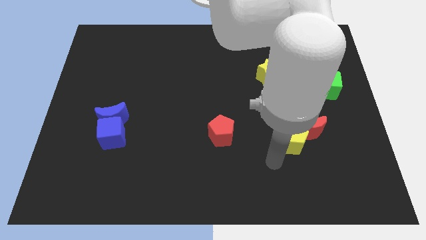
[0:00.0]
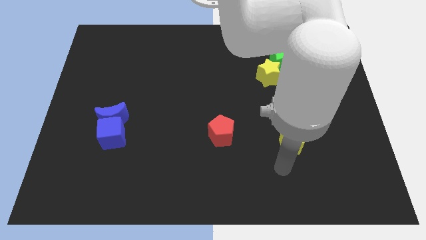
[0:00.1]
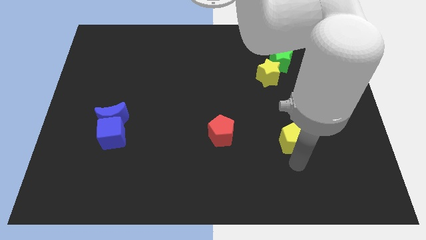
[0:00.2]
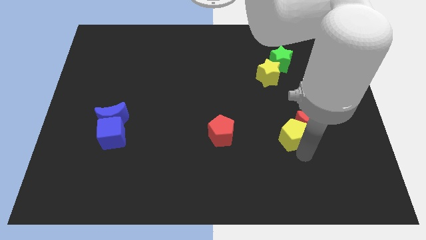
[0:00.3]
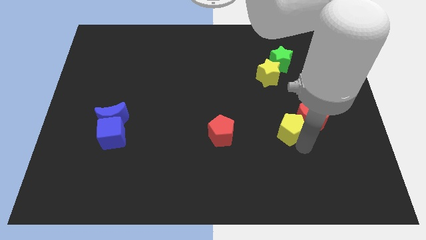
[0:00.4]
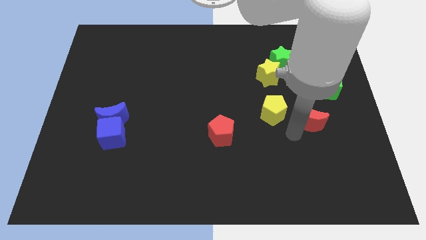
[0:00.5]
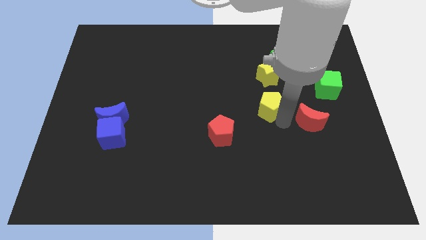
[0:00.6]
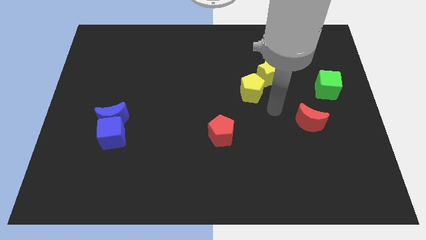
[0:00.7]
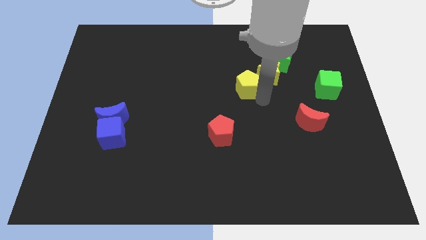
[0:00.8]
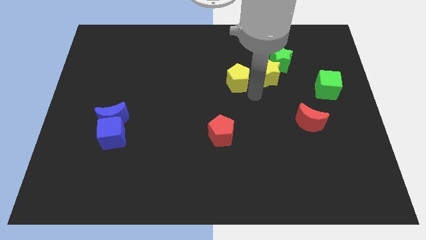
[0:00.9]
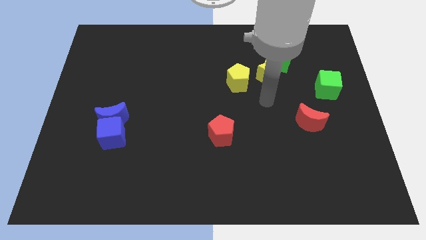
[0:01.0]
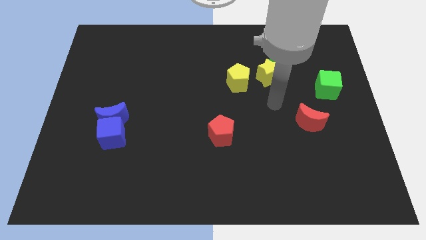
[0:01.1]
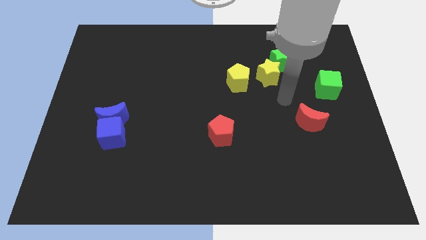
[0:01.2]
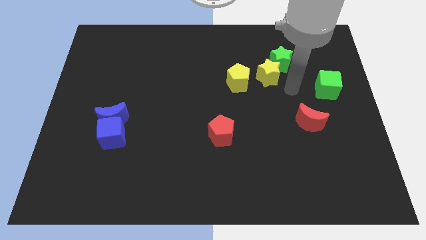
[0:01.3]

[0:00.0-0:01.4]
separate yellow pentagon from the red crescent

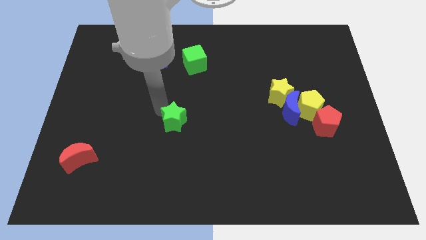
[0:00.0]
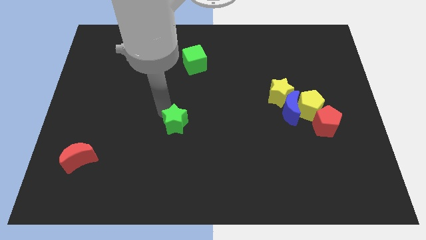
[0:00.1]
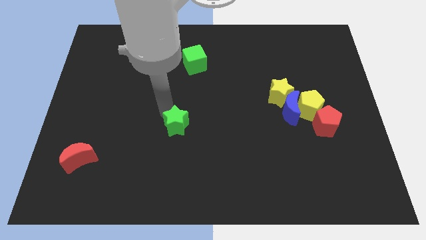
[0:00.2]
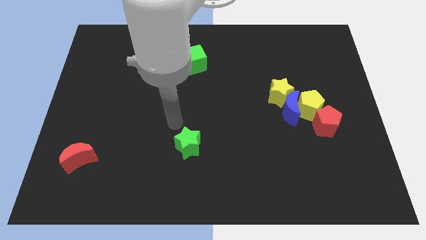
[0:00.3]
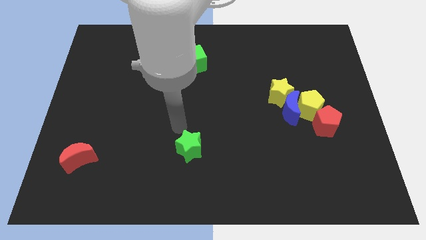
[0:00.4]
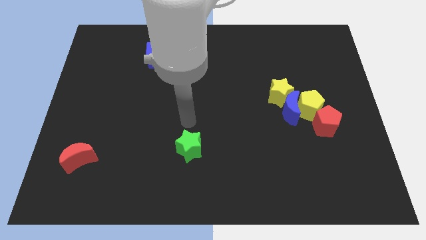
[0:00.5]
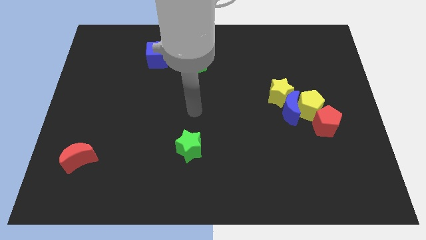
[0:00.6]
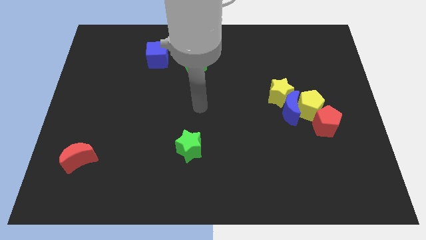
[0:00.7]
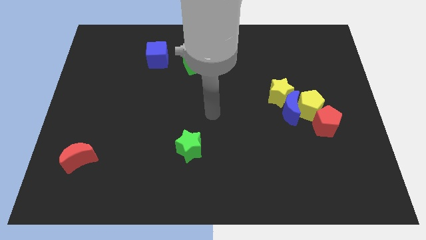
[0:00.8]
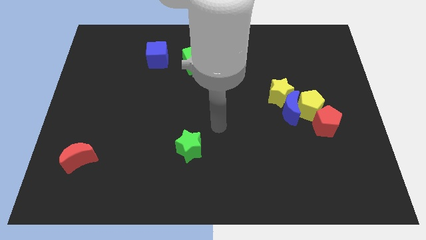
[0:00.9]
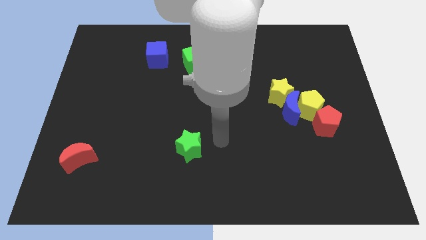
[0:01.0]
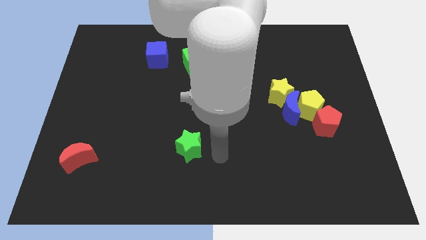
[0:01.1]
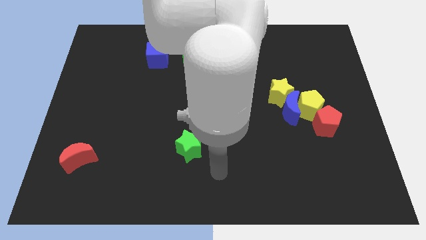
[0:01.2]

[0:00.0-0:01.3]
place the green star parallel to red crescent

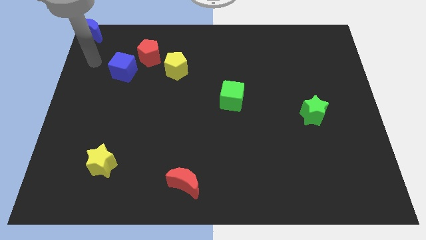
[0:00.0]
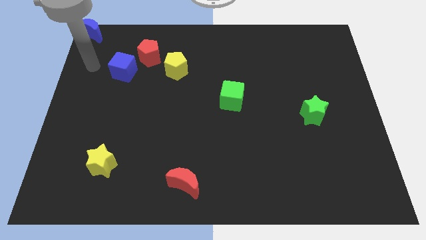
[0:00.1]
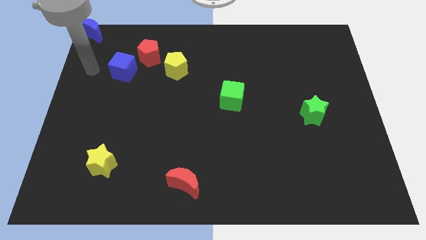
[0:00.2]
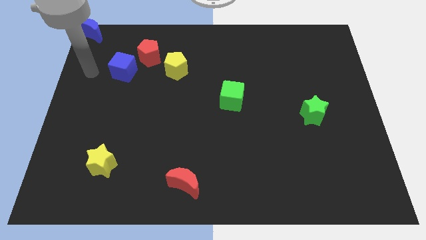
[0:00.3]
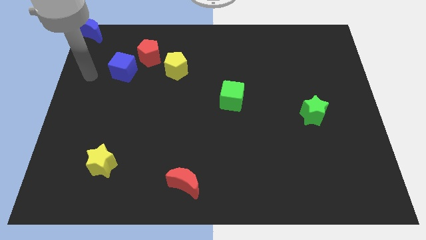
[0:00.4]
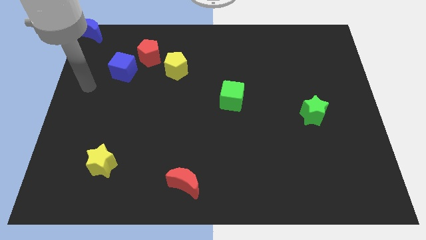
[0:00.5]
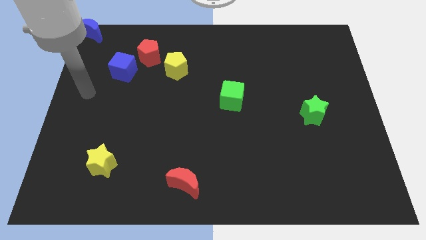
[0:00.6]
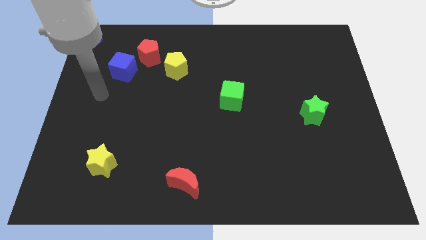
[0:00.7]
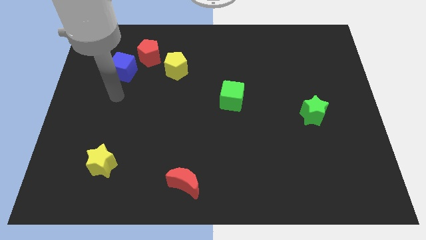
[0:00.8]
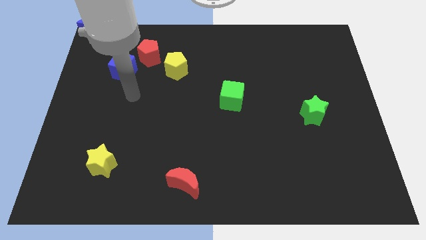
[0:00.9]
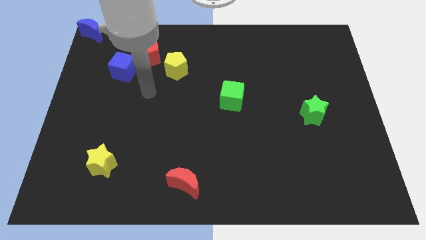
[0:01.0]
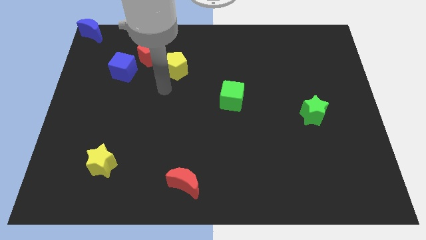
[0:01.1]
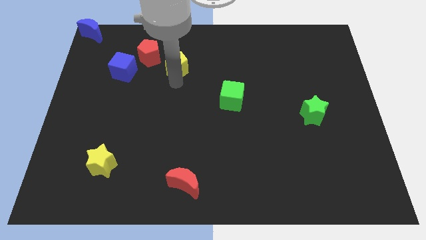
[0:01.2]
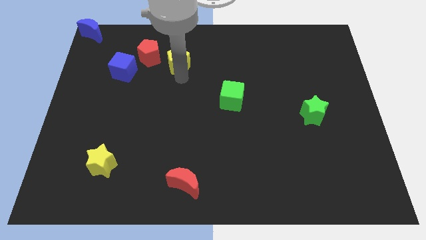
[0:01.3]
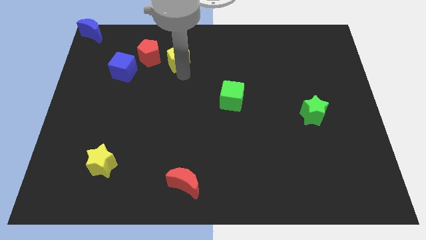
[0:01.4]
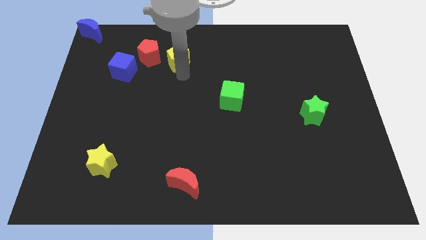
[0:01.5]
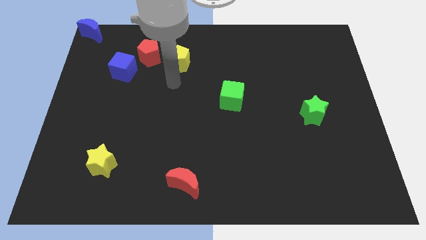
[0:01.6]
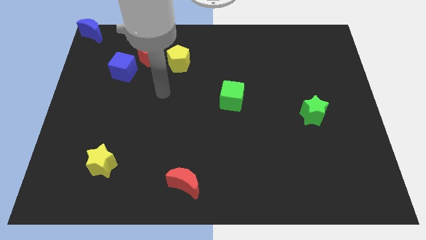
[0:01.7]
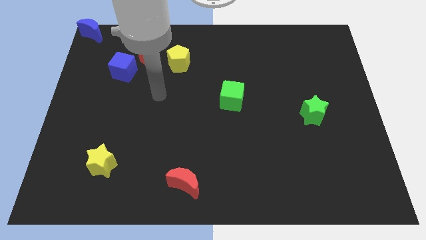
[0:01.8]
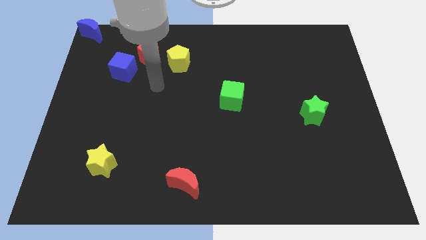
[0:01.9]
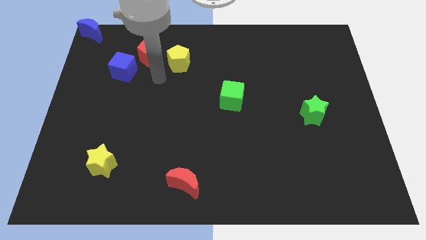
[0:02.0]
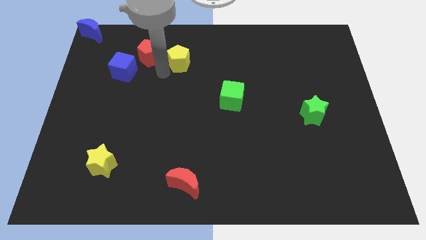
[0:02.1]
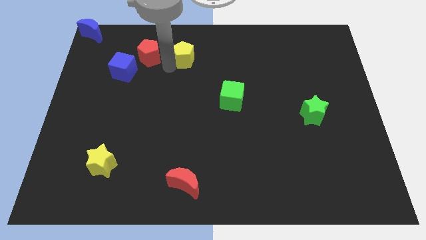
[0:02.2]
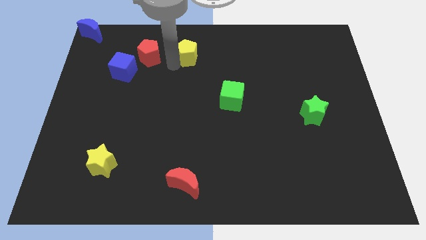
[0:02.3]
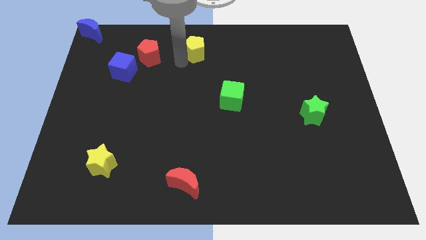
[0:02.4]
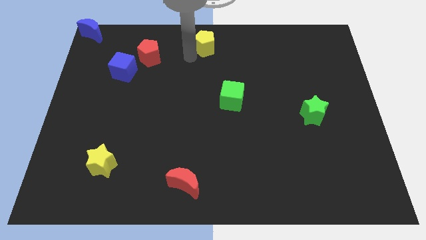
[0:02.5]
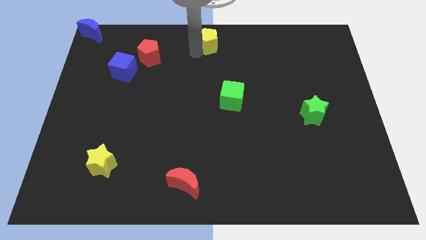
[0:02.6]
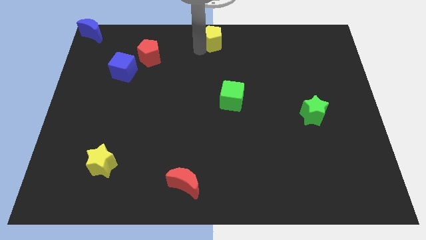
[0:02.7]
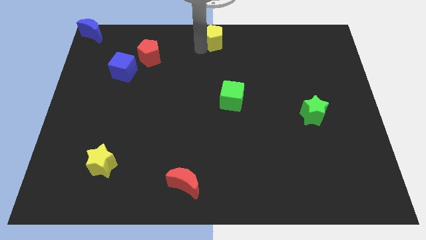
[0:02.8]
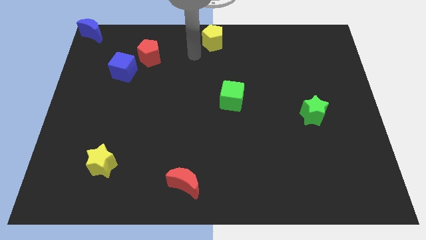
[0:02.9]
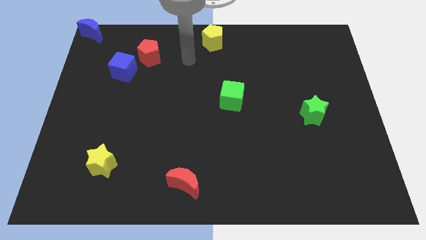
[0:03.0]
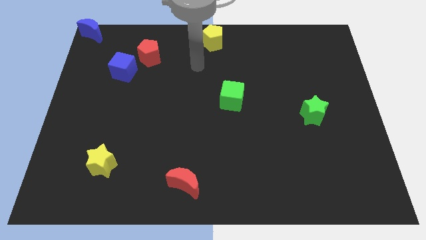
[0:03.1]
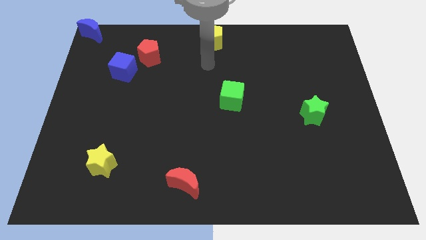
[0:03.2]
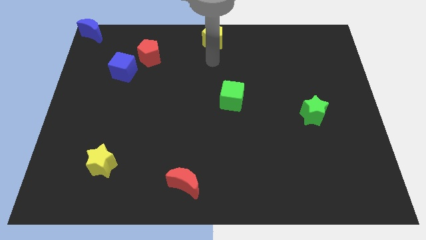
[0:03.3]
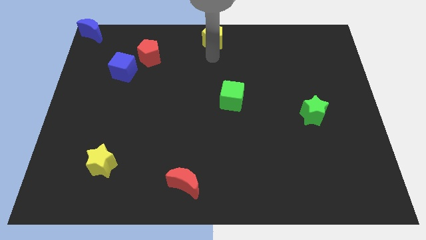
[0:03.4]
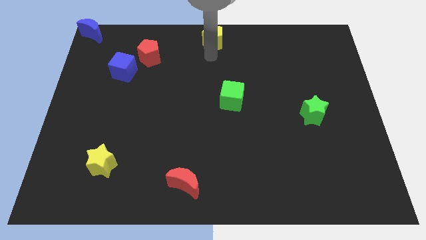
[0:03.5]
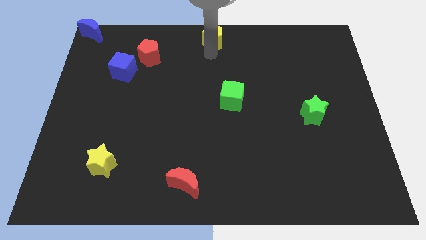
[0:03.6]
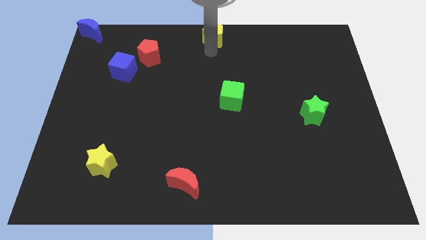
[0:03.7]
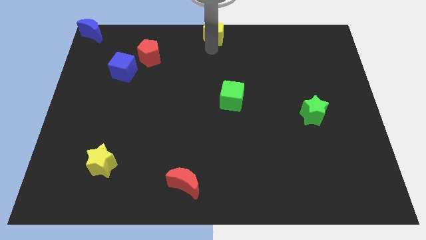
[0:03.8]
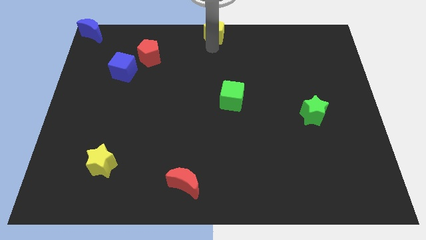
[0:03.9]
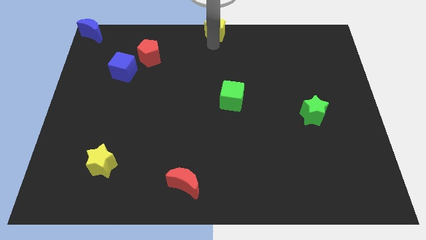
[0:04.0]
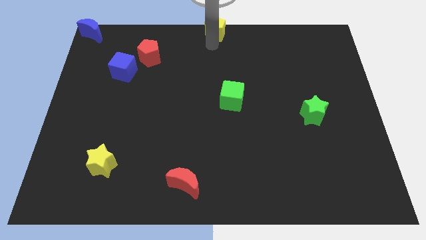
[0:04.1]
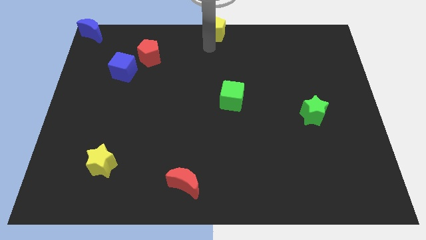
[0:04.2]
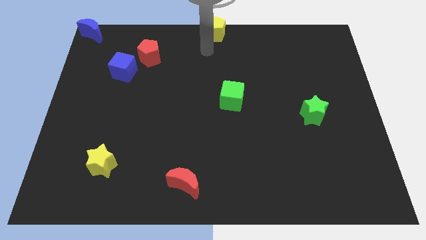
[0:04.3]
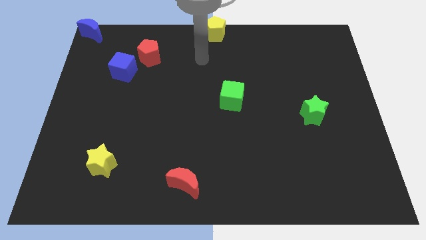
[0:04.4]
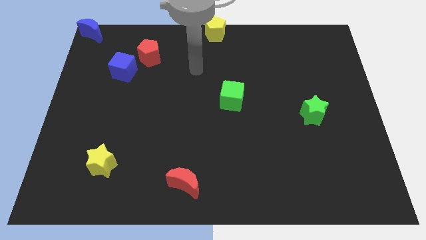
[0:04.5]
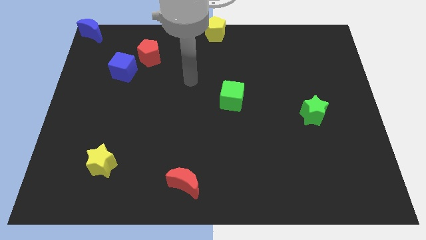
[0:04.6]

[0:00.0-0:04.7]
place the yellow pentagon at the top center of the board

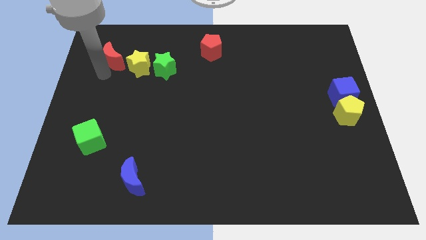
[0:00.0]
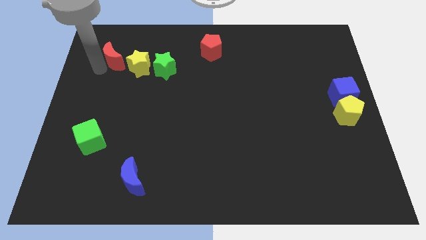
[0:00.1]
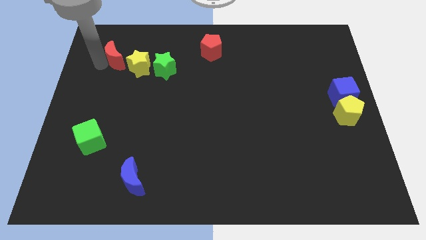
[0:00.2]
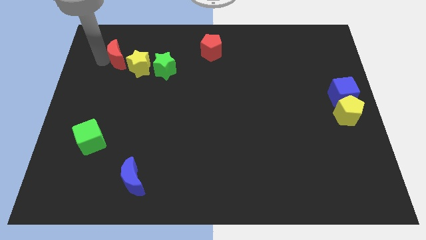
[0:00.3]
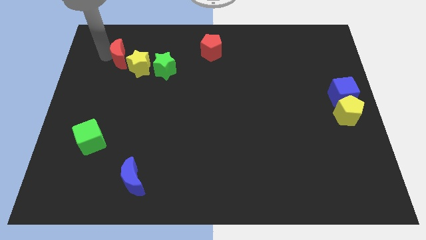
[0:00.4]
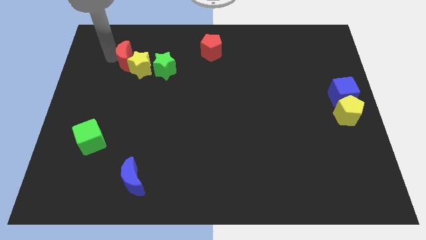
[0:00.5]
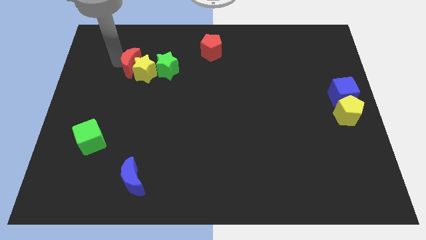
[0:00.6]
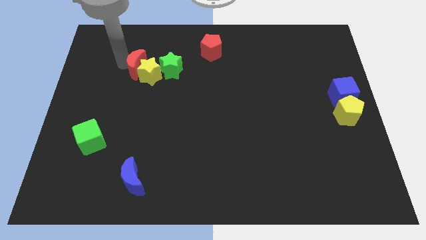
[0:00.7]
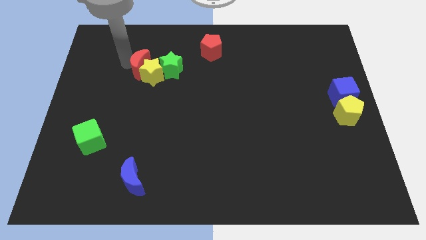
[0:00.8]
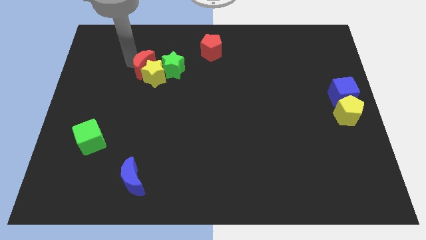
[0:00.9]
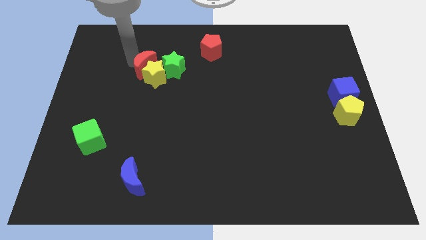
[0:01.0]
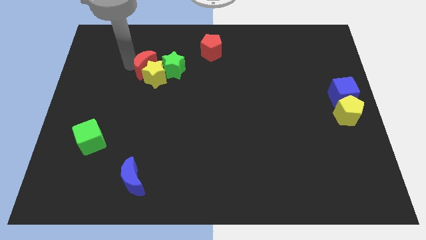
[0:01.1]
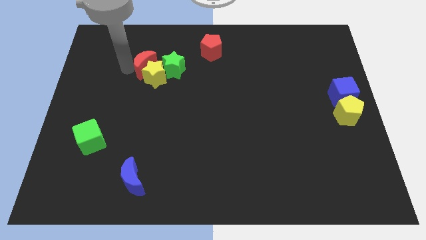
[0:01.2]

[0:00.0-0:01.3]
push the red crescent into the yellow star

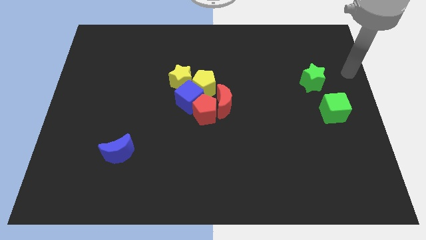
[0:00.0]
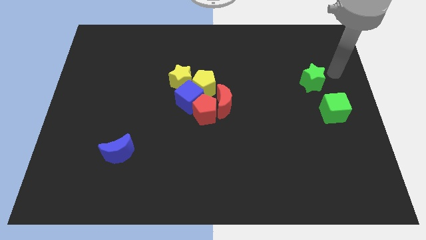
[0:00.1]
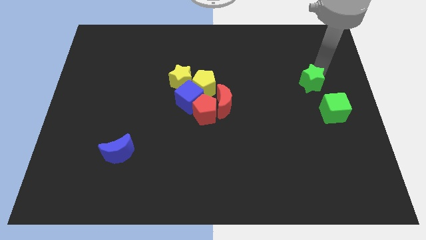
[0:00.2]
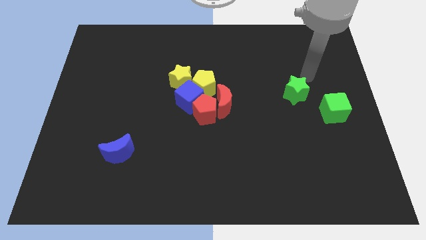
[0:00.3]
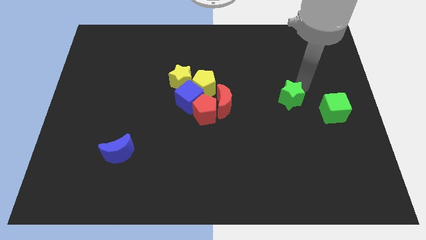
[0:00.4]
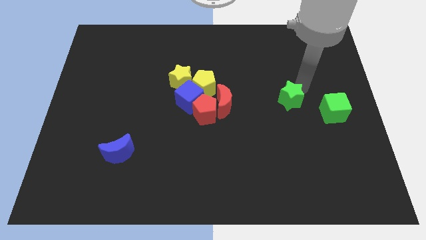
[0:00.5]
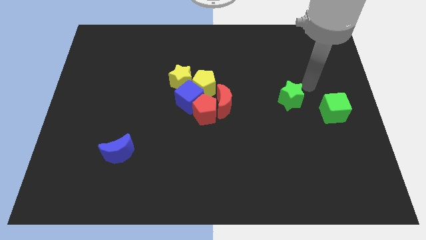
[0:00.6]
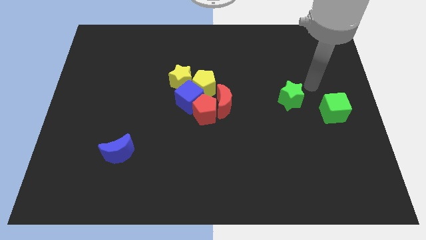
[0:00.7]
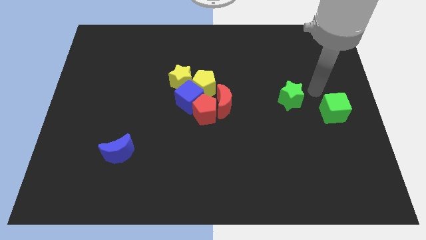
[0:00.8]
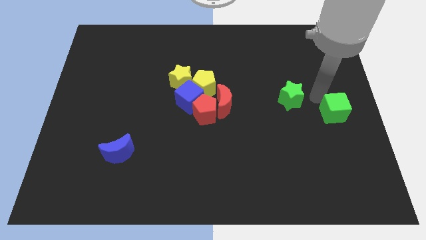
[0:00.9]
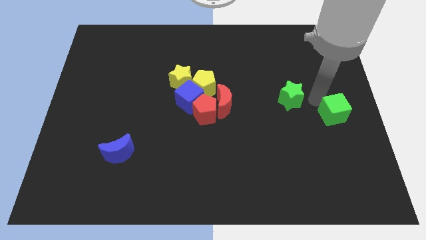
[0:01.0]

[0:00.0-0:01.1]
push the green star to the bottom of the board
